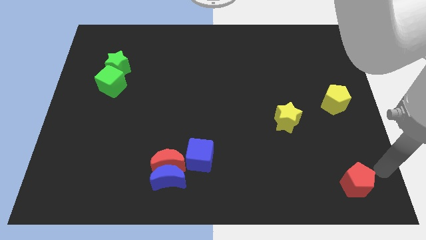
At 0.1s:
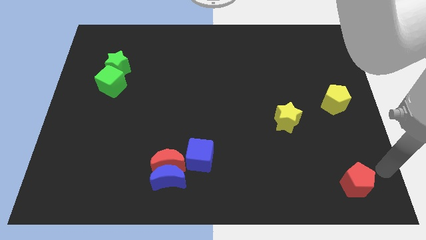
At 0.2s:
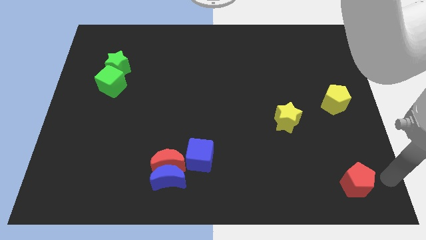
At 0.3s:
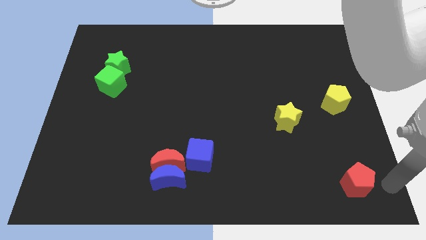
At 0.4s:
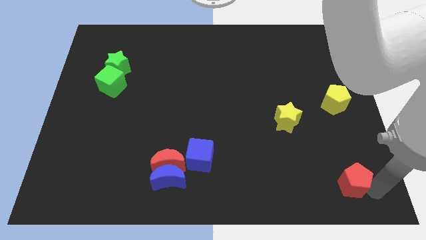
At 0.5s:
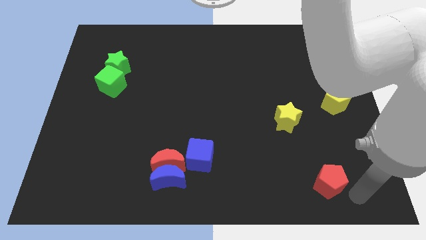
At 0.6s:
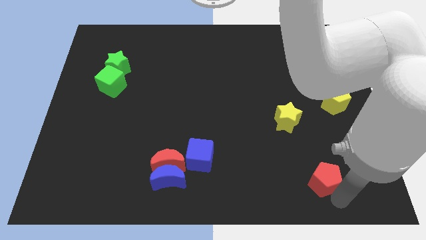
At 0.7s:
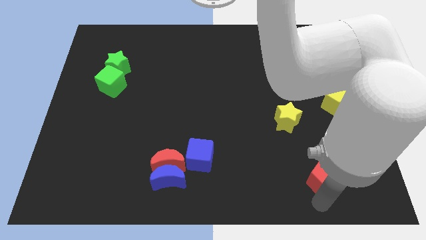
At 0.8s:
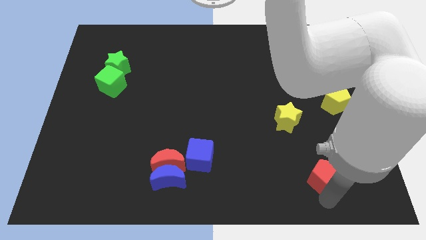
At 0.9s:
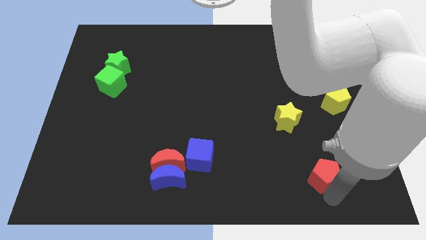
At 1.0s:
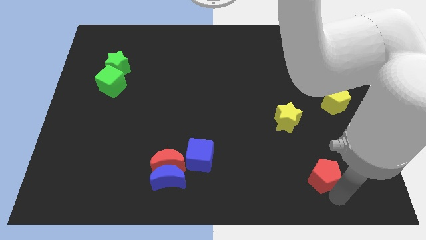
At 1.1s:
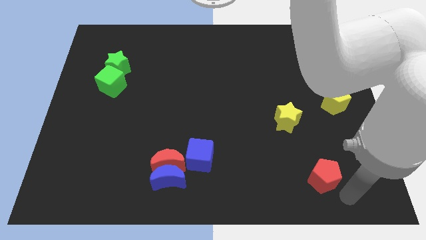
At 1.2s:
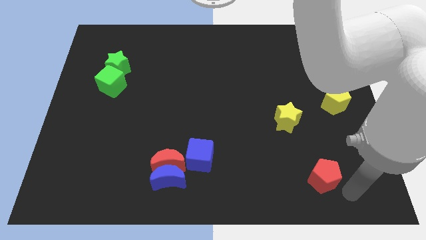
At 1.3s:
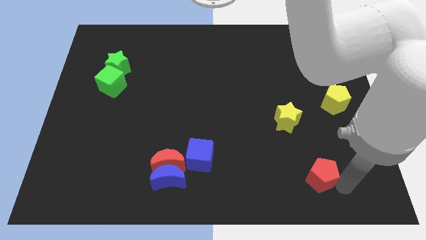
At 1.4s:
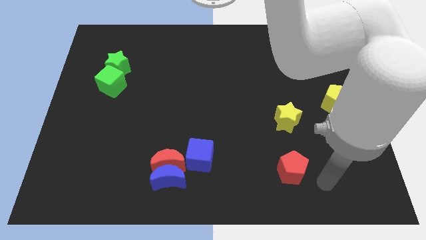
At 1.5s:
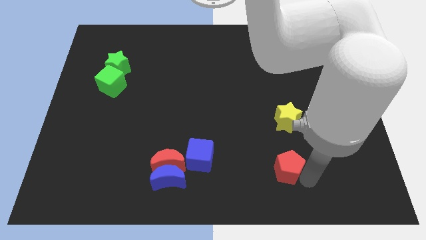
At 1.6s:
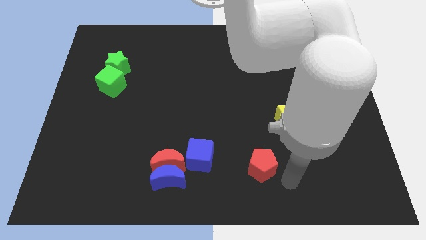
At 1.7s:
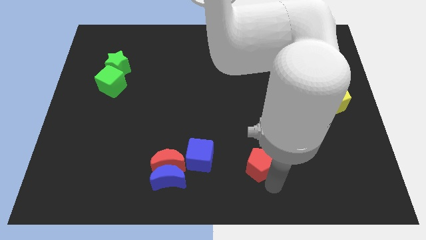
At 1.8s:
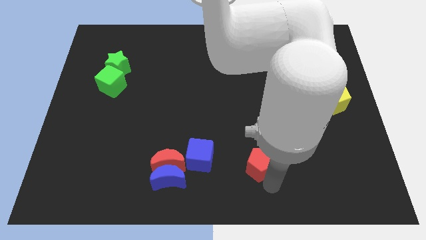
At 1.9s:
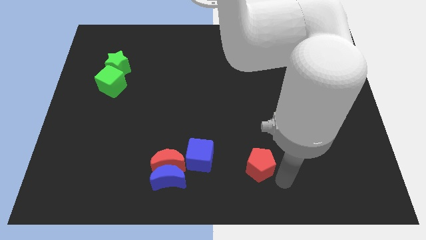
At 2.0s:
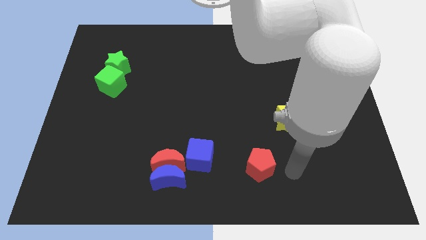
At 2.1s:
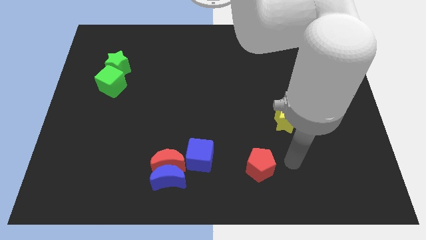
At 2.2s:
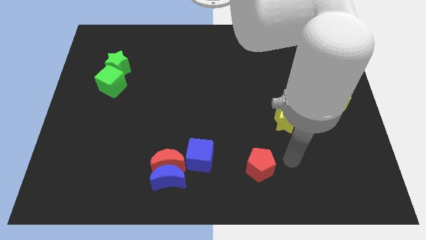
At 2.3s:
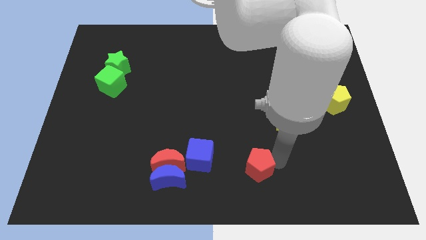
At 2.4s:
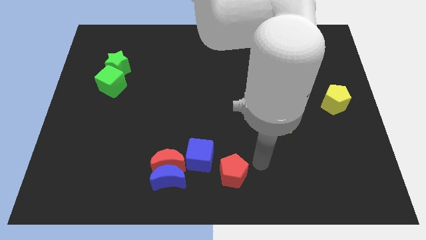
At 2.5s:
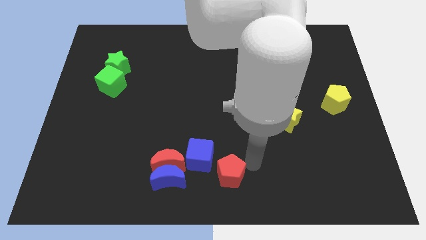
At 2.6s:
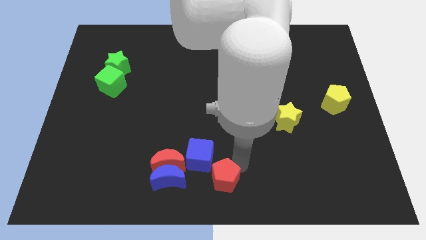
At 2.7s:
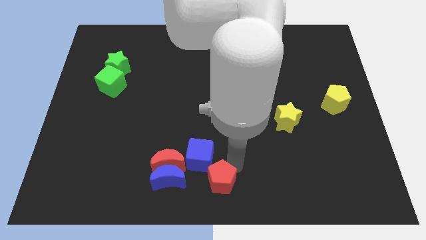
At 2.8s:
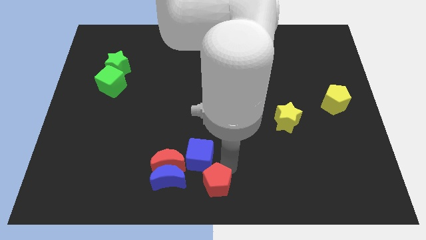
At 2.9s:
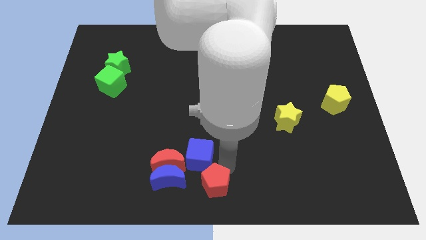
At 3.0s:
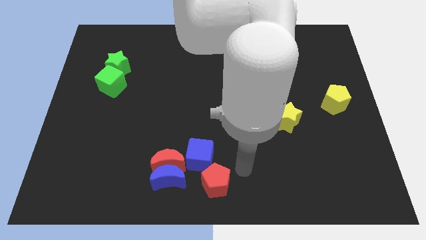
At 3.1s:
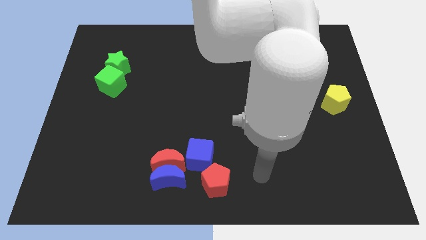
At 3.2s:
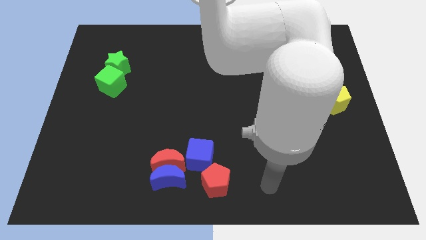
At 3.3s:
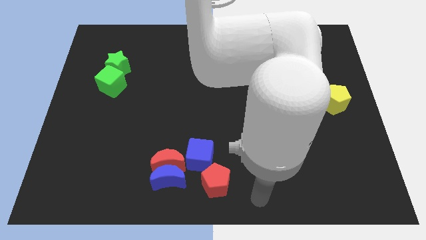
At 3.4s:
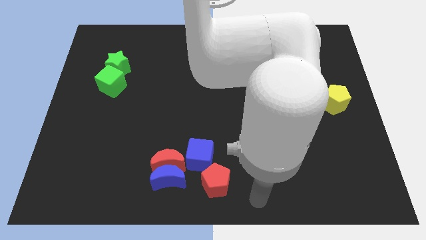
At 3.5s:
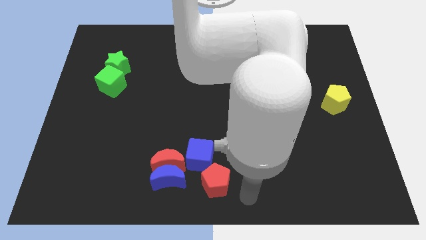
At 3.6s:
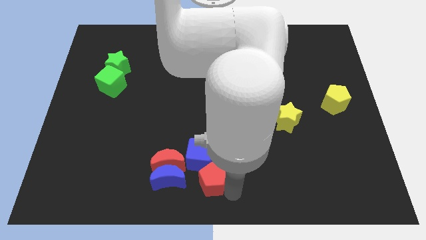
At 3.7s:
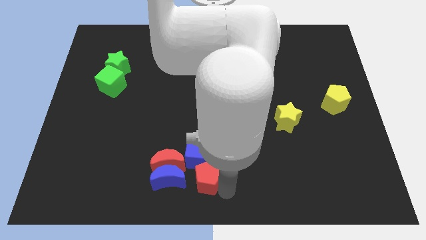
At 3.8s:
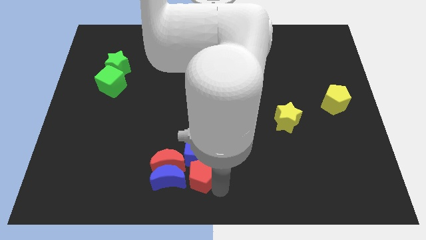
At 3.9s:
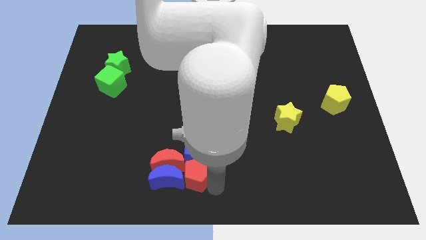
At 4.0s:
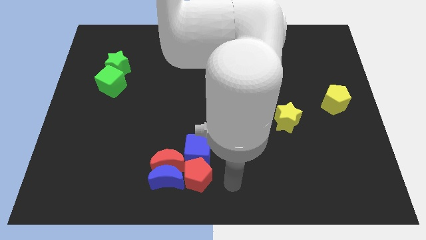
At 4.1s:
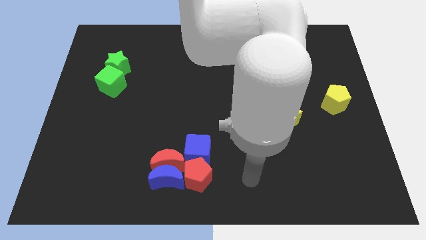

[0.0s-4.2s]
place the red pentagon down to the blue cube

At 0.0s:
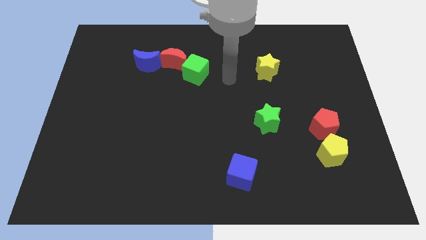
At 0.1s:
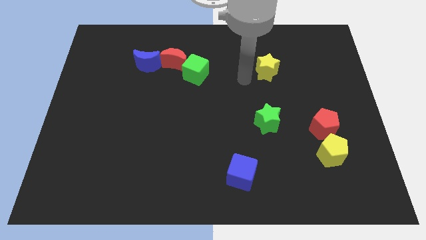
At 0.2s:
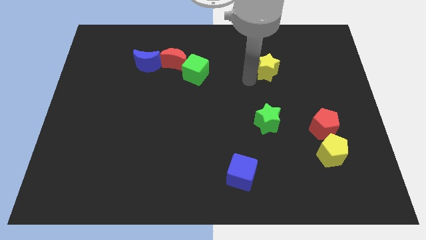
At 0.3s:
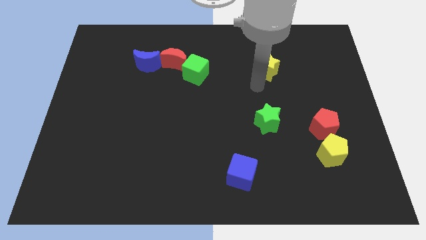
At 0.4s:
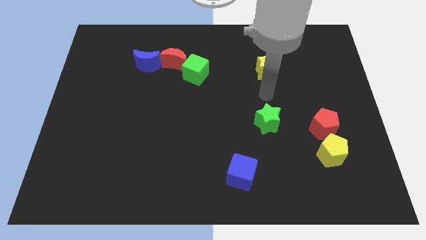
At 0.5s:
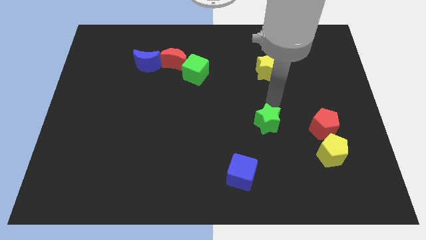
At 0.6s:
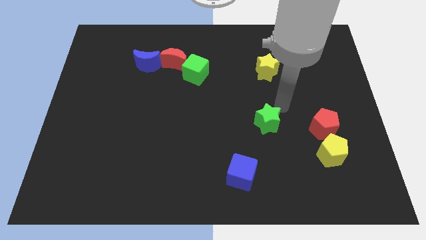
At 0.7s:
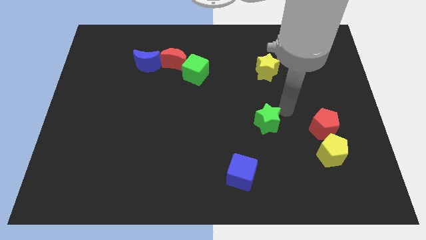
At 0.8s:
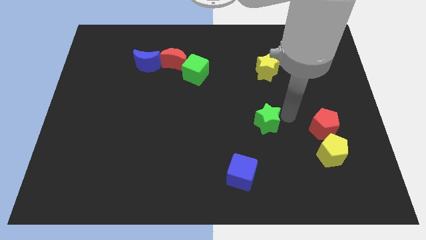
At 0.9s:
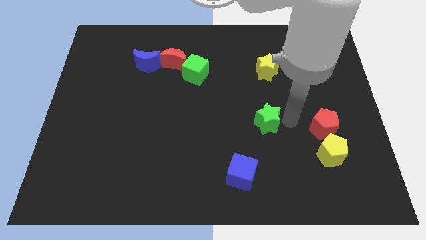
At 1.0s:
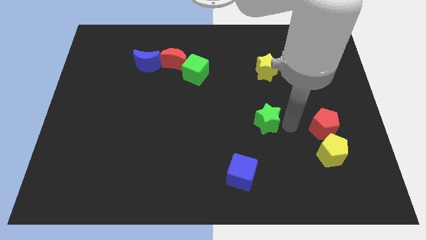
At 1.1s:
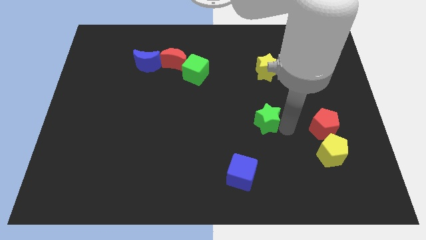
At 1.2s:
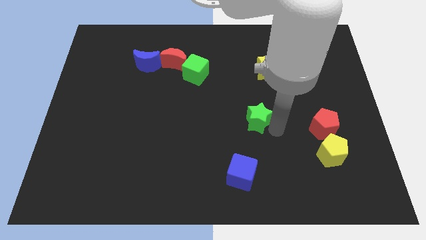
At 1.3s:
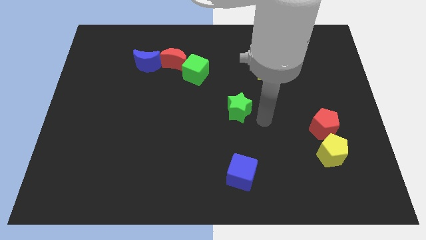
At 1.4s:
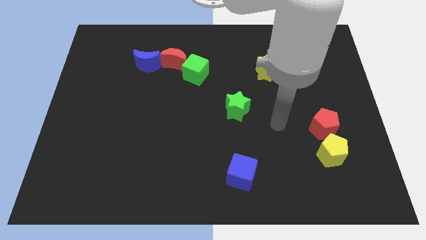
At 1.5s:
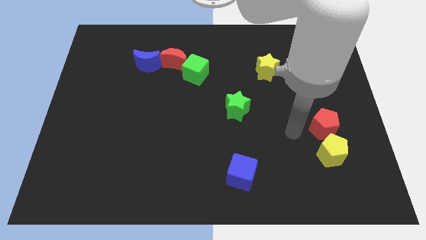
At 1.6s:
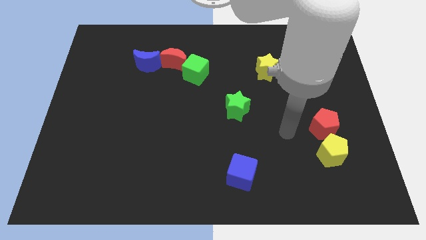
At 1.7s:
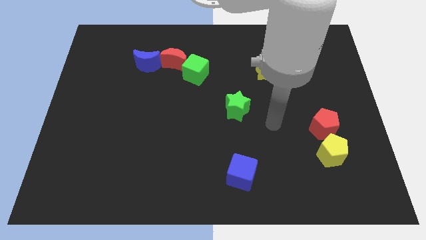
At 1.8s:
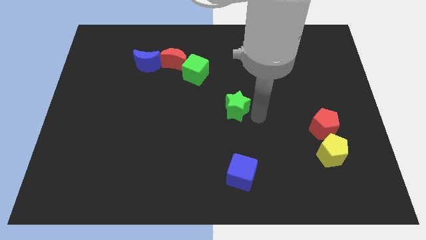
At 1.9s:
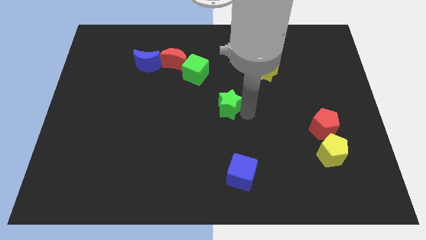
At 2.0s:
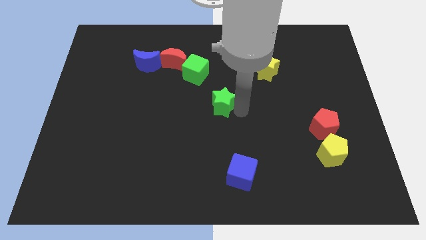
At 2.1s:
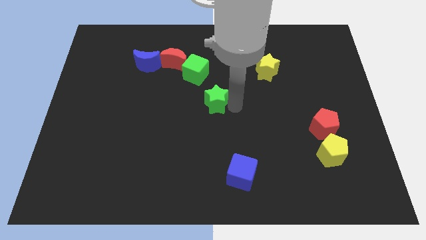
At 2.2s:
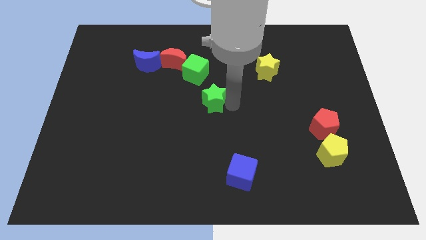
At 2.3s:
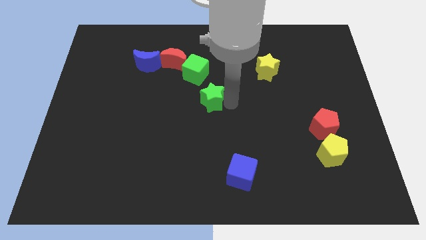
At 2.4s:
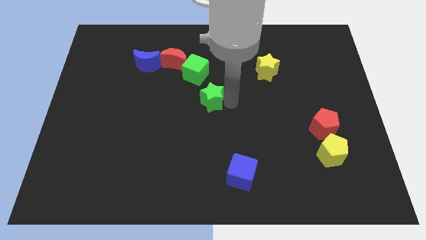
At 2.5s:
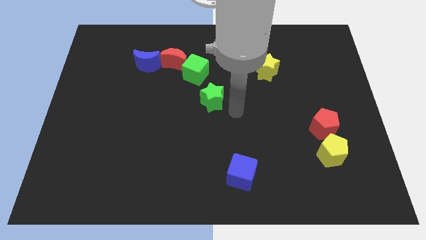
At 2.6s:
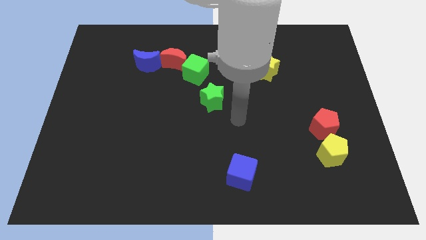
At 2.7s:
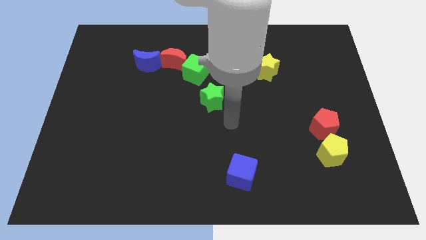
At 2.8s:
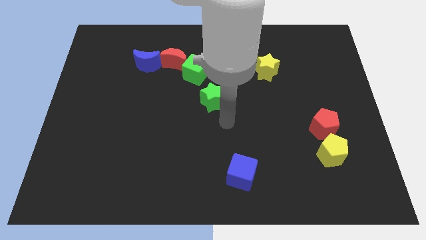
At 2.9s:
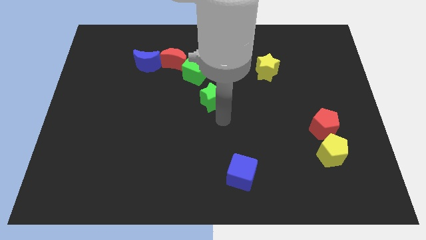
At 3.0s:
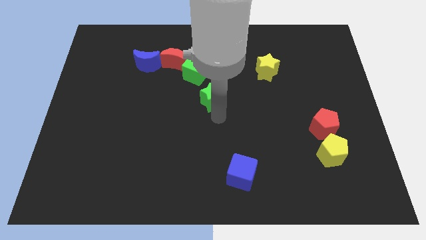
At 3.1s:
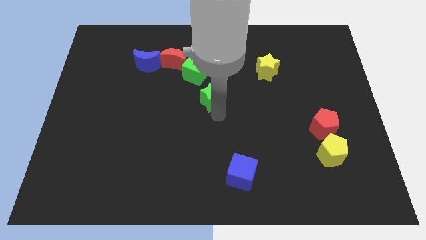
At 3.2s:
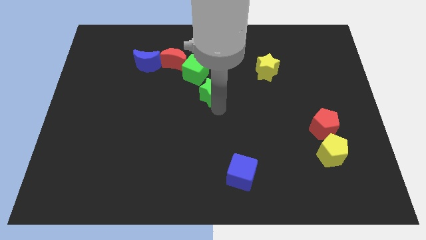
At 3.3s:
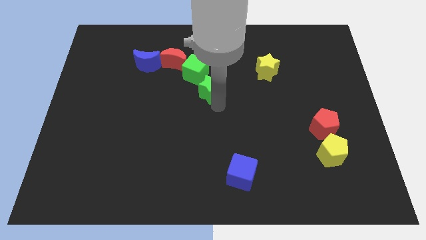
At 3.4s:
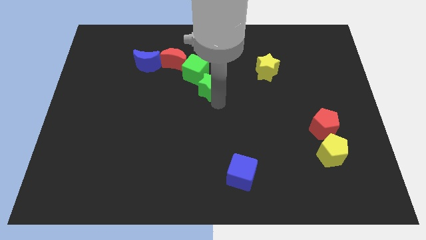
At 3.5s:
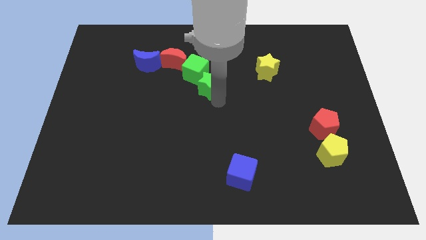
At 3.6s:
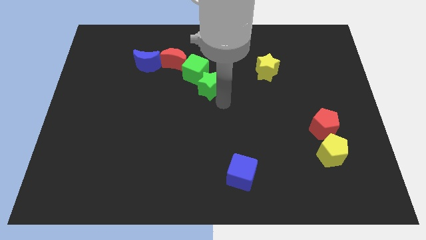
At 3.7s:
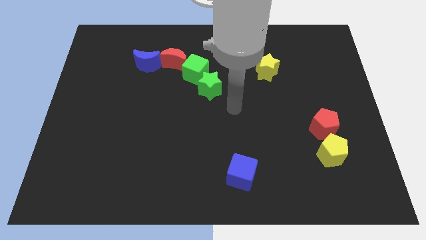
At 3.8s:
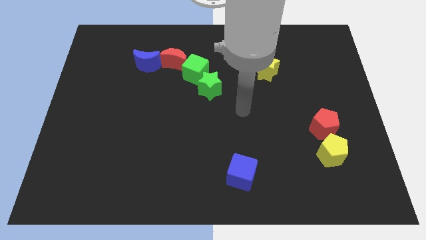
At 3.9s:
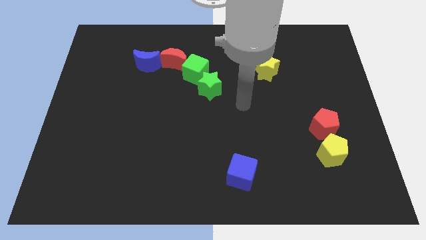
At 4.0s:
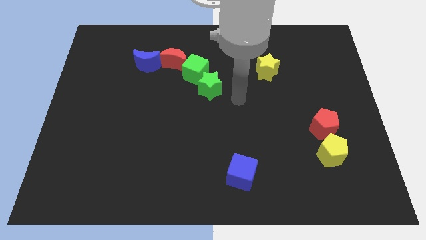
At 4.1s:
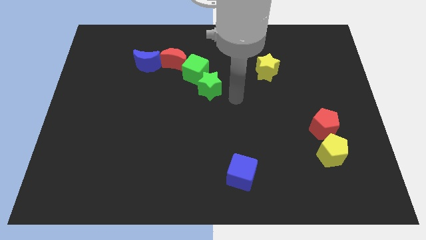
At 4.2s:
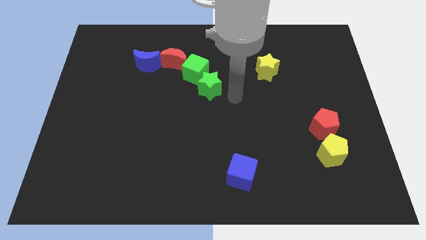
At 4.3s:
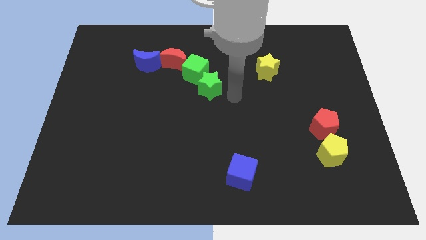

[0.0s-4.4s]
push the green star to the right of the green cube

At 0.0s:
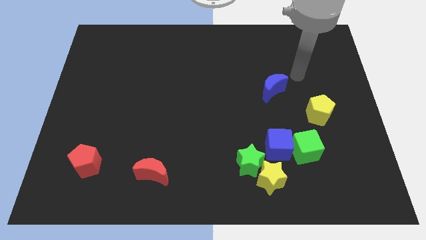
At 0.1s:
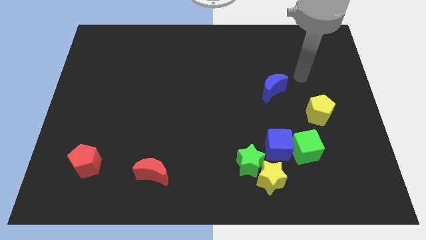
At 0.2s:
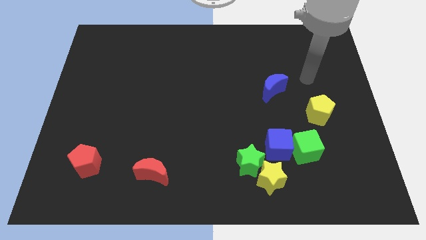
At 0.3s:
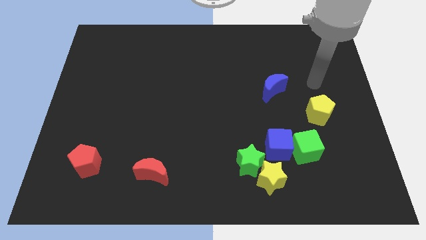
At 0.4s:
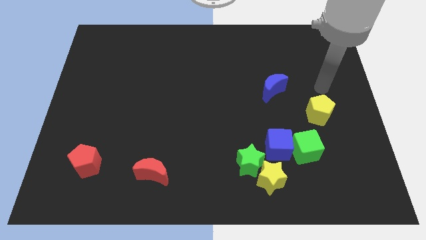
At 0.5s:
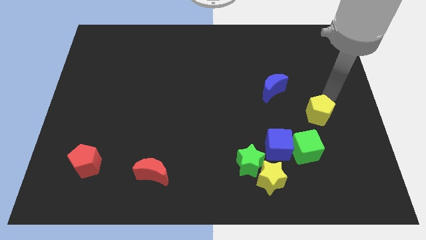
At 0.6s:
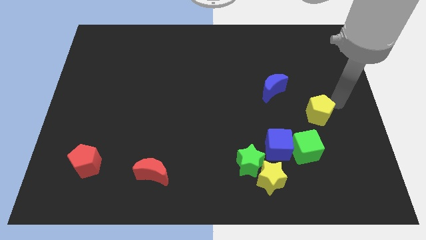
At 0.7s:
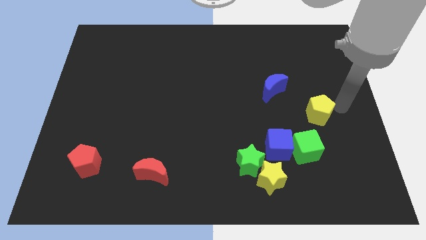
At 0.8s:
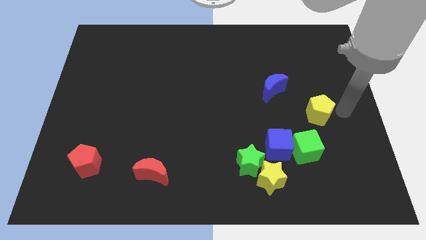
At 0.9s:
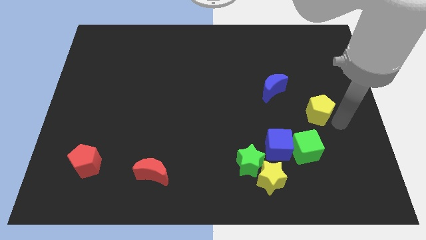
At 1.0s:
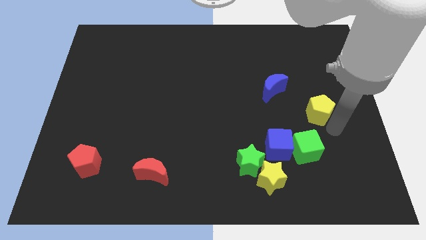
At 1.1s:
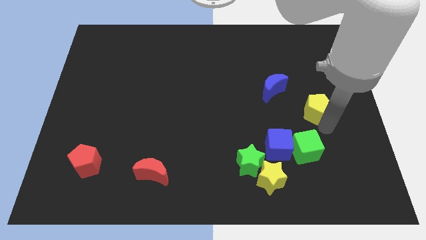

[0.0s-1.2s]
point your hand at the bottom right side of the yellow pentagon
